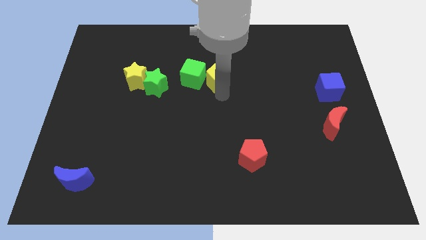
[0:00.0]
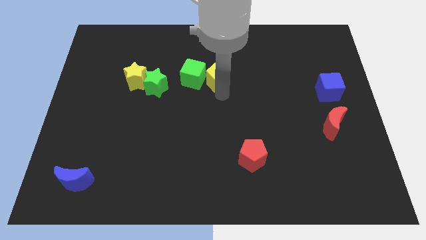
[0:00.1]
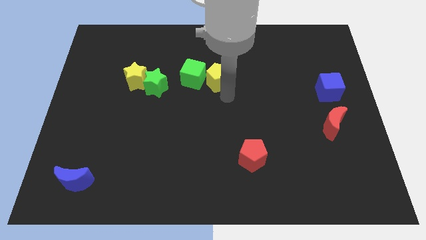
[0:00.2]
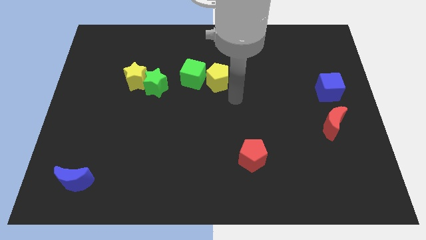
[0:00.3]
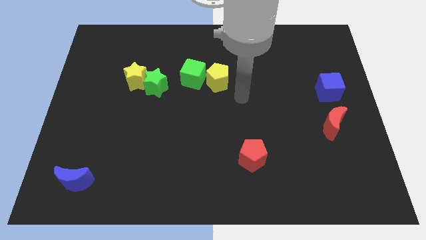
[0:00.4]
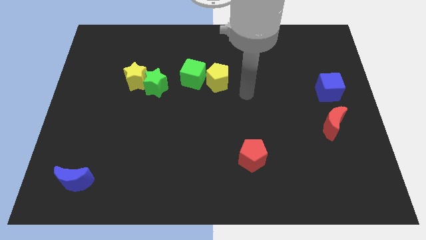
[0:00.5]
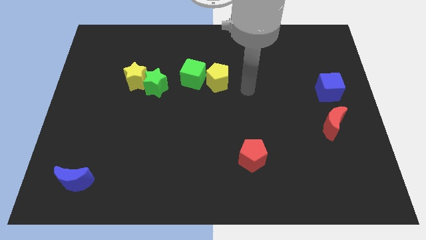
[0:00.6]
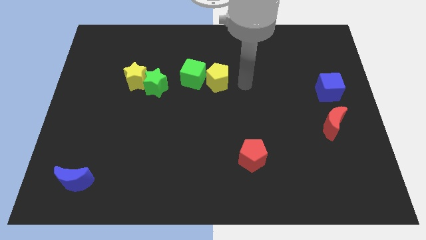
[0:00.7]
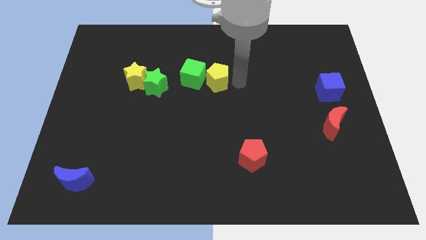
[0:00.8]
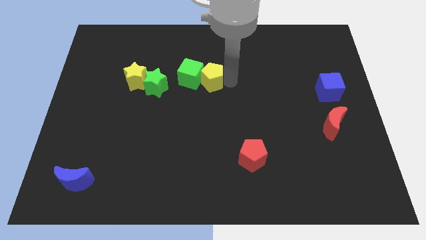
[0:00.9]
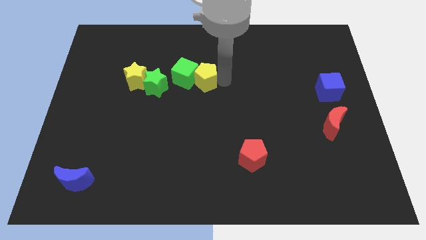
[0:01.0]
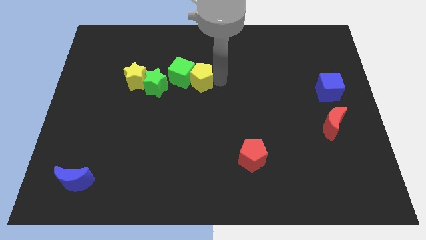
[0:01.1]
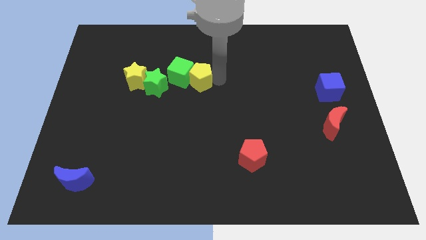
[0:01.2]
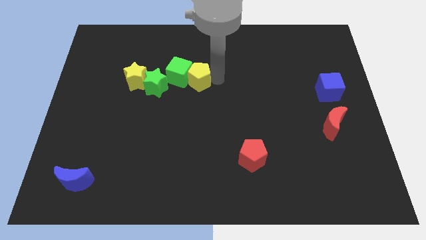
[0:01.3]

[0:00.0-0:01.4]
push the green cube and yellow pentagon towards the left

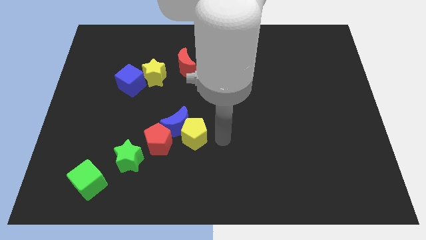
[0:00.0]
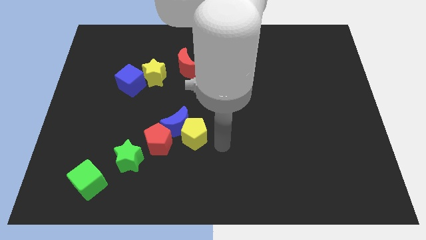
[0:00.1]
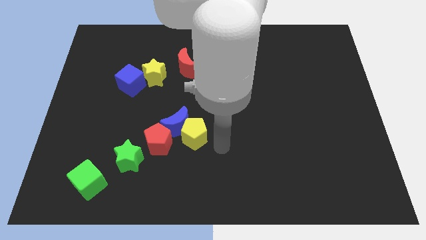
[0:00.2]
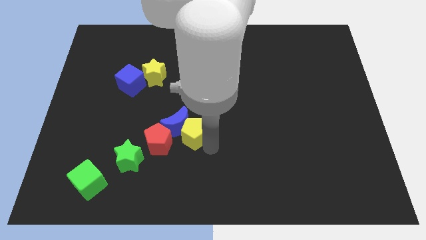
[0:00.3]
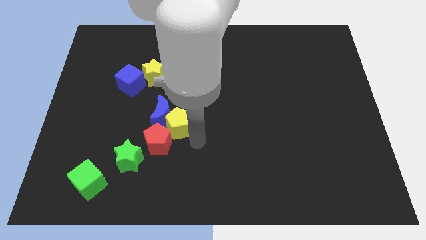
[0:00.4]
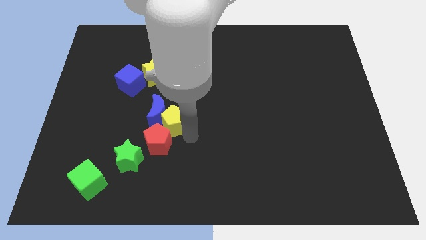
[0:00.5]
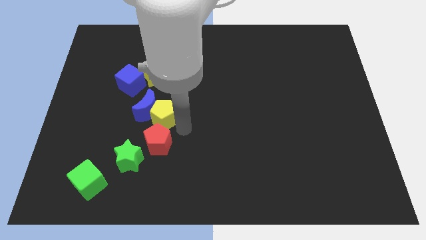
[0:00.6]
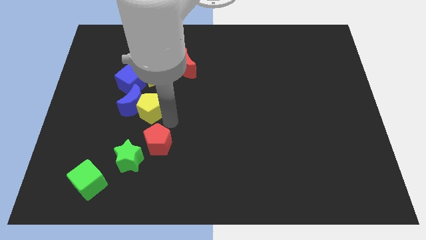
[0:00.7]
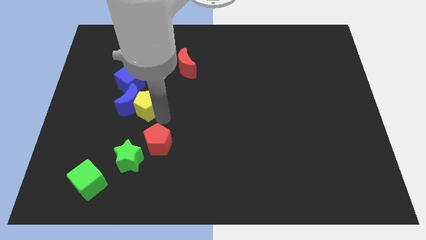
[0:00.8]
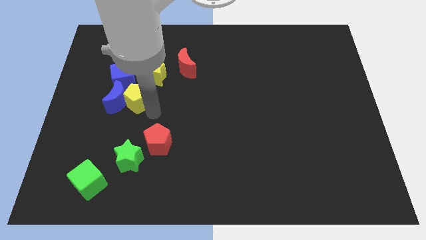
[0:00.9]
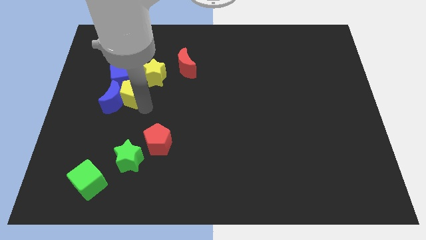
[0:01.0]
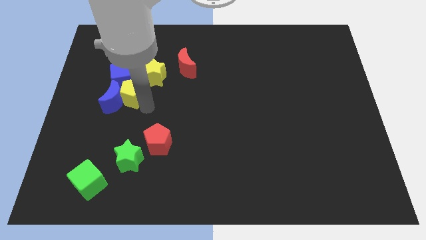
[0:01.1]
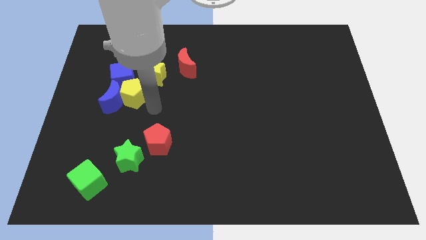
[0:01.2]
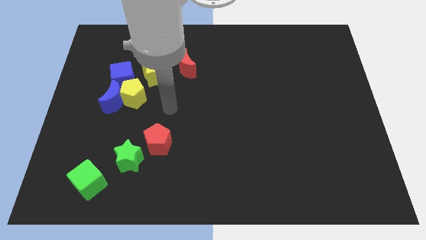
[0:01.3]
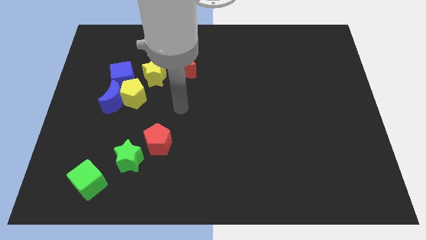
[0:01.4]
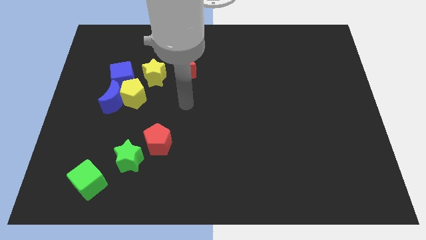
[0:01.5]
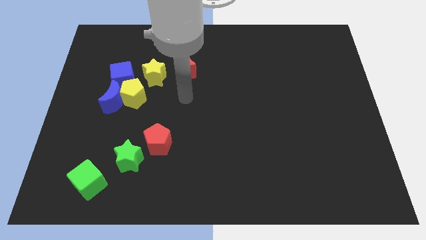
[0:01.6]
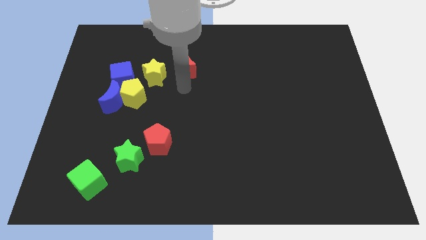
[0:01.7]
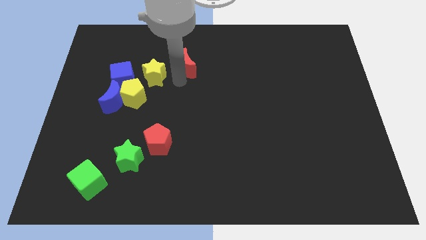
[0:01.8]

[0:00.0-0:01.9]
move the yellow pentagon and blue crescent towards the left center

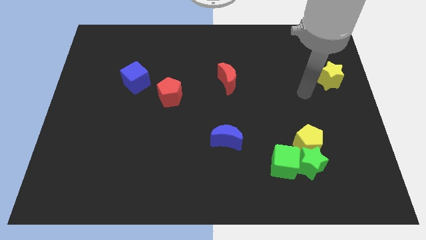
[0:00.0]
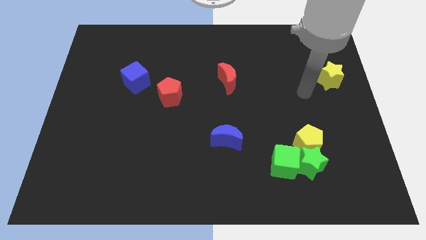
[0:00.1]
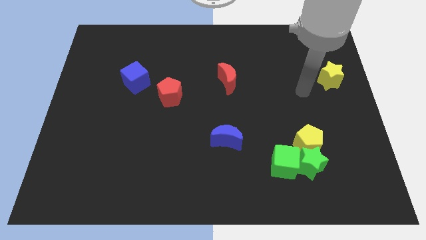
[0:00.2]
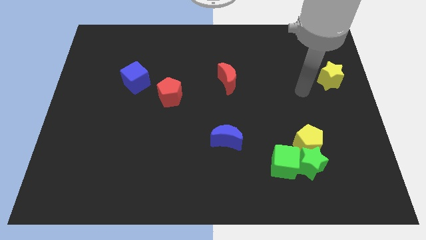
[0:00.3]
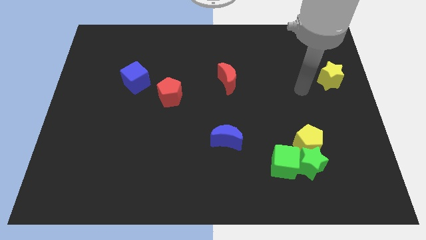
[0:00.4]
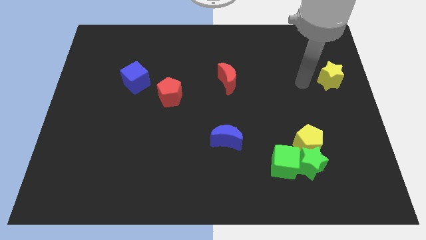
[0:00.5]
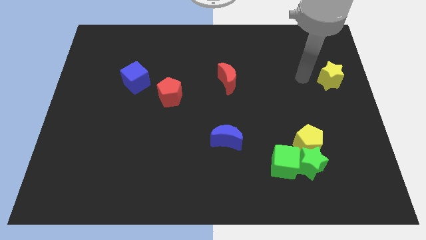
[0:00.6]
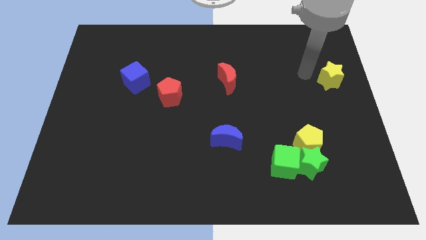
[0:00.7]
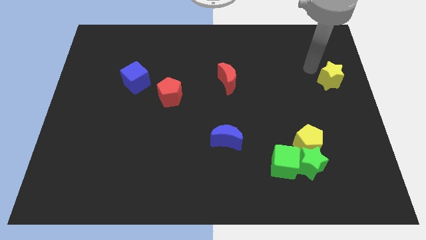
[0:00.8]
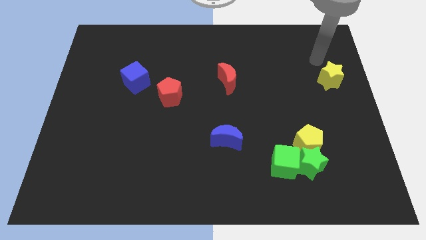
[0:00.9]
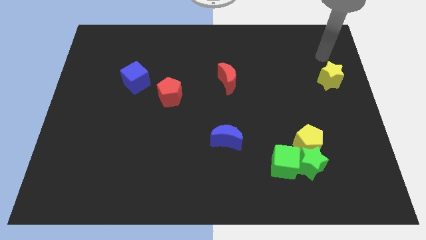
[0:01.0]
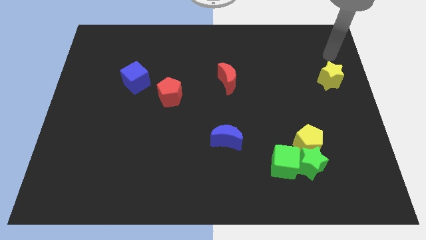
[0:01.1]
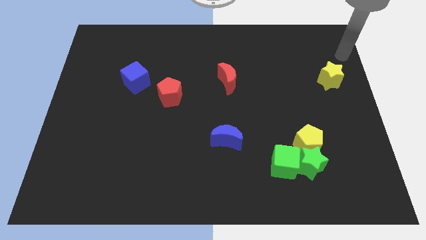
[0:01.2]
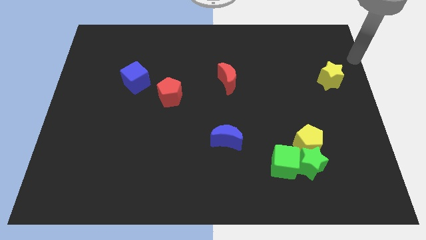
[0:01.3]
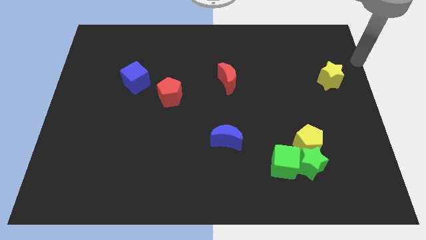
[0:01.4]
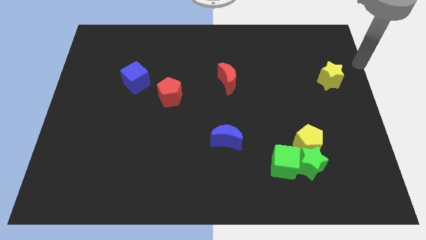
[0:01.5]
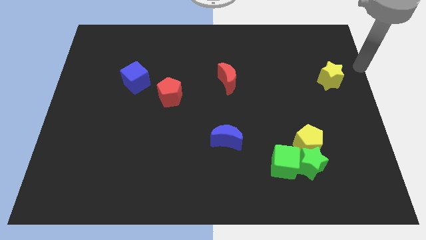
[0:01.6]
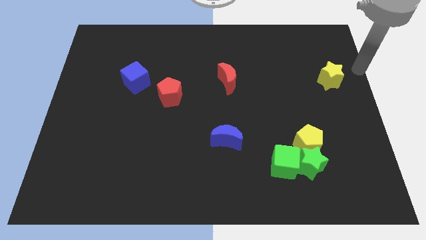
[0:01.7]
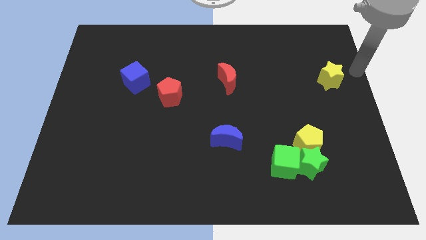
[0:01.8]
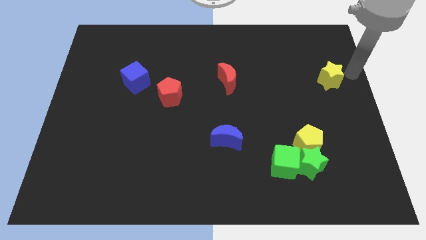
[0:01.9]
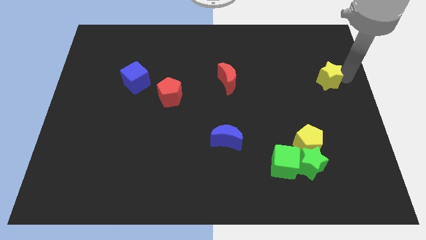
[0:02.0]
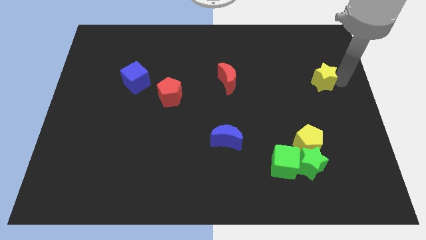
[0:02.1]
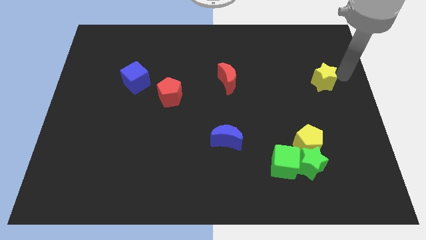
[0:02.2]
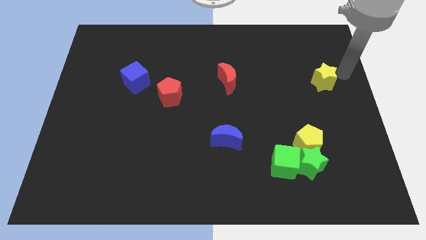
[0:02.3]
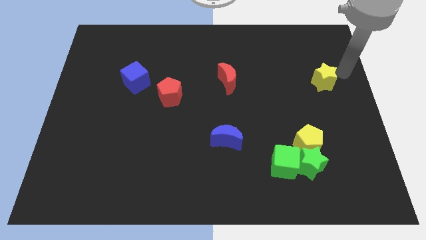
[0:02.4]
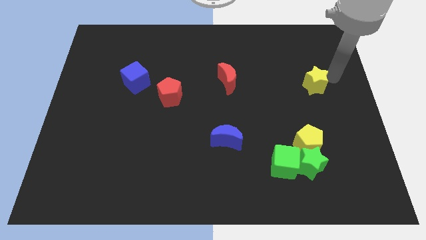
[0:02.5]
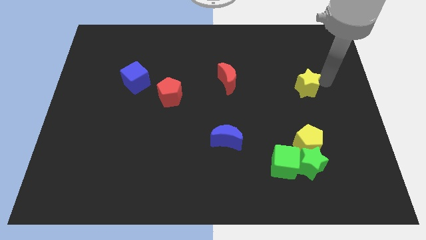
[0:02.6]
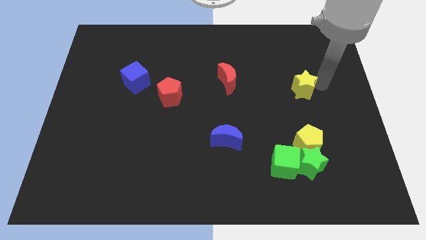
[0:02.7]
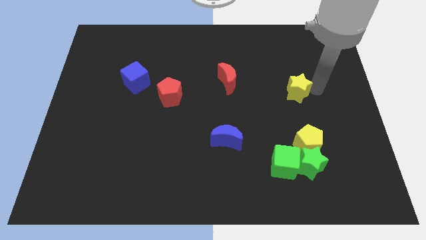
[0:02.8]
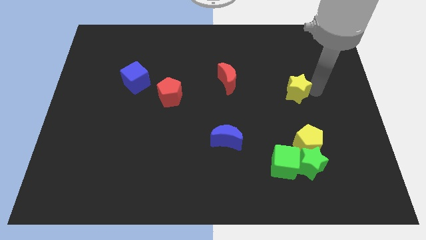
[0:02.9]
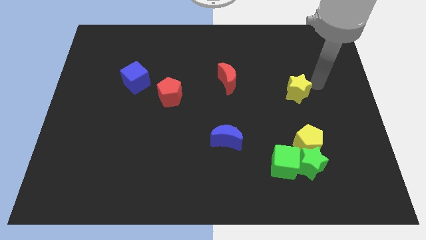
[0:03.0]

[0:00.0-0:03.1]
push the yellow star to the top of the yellow pentagon

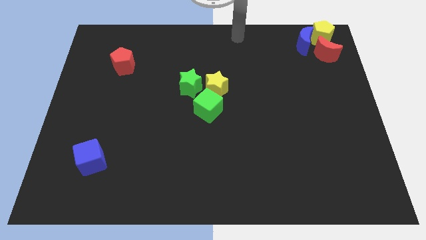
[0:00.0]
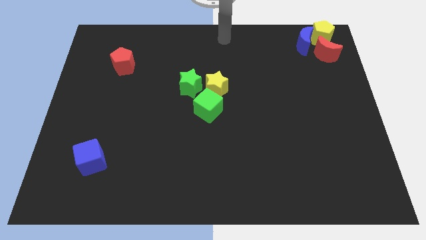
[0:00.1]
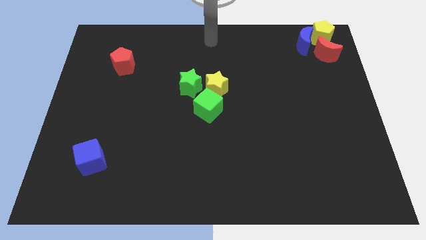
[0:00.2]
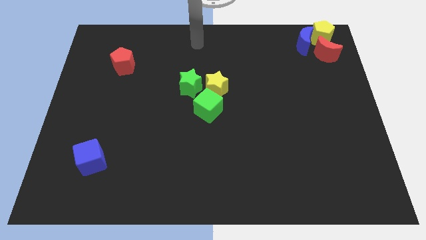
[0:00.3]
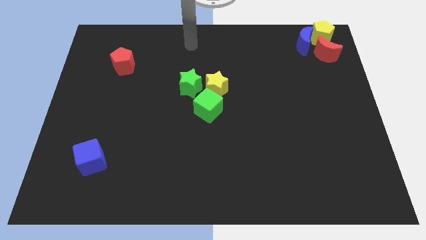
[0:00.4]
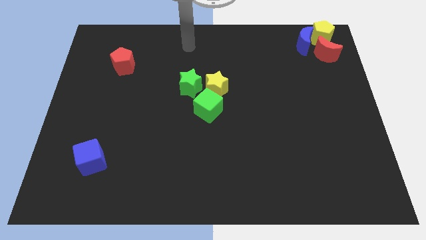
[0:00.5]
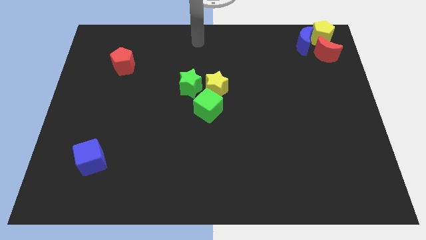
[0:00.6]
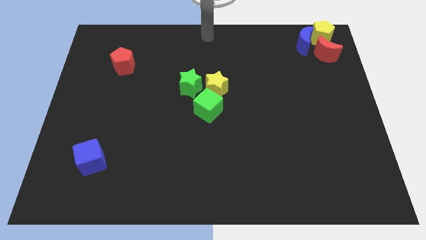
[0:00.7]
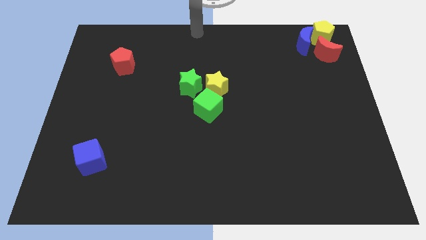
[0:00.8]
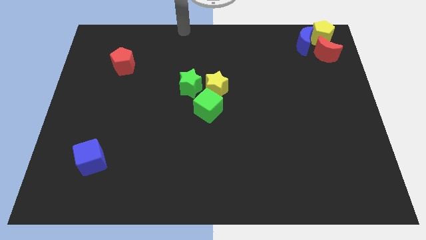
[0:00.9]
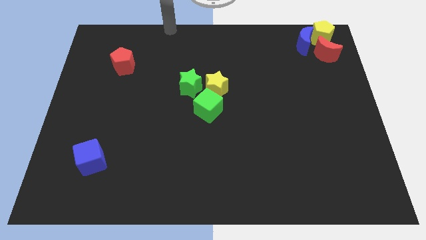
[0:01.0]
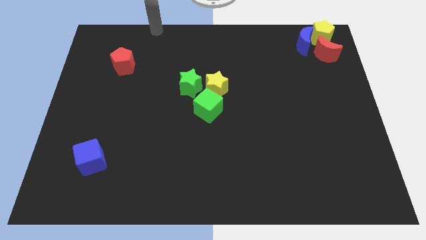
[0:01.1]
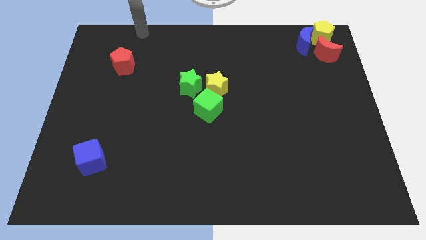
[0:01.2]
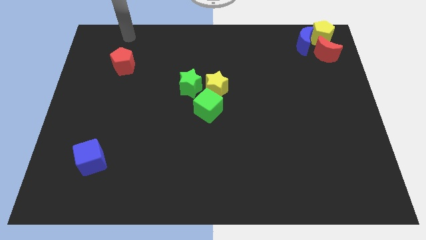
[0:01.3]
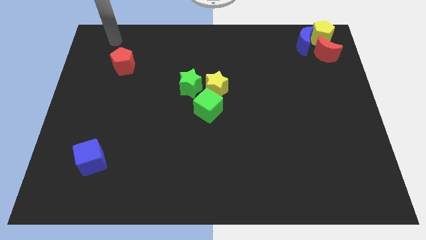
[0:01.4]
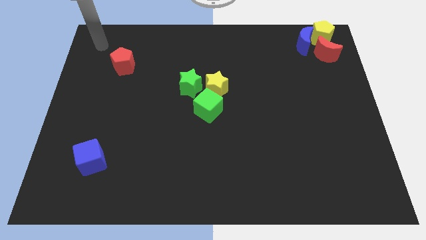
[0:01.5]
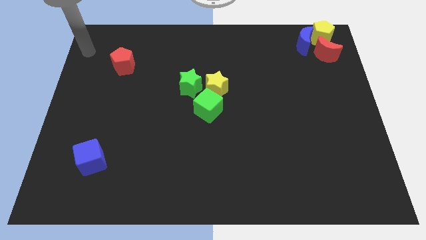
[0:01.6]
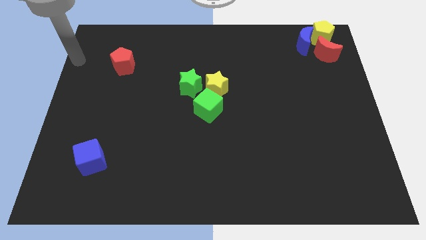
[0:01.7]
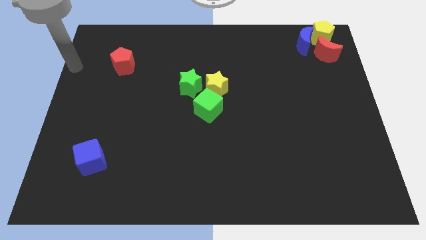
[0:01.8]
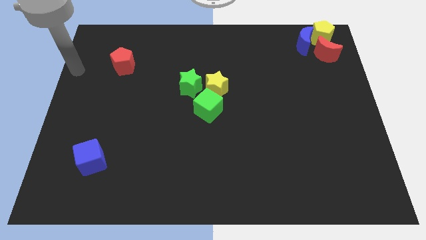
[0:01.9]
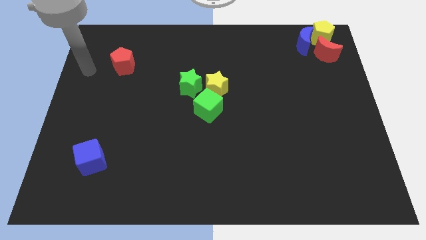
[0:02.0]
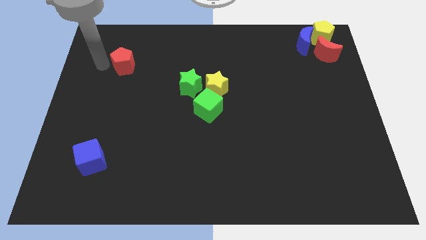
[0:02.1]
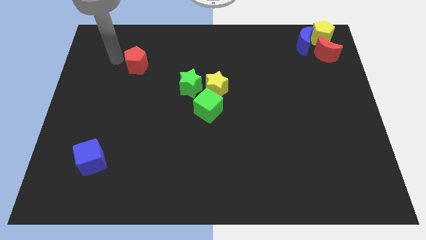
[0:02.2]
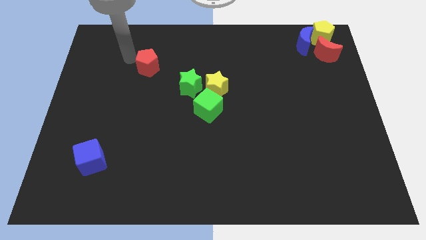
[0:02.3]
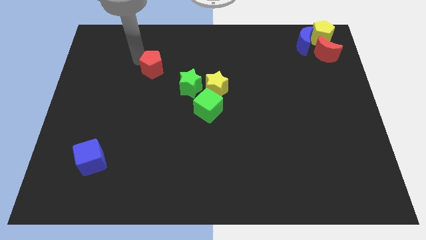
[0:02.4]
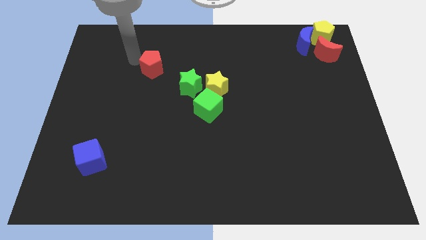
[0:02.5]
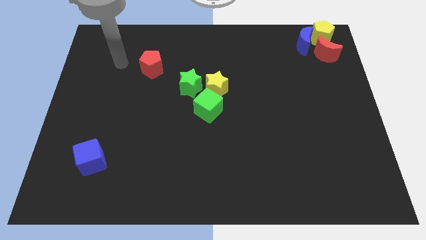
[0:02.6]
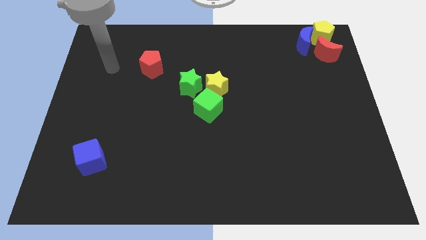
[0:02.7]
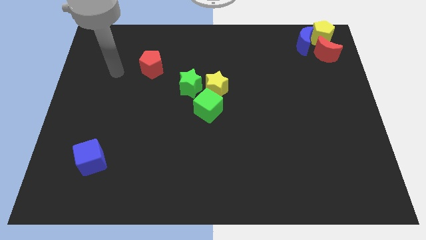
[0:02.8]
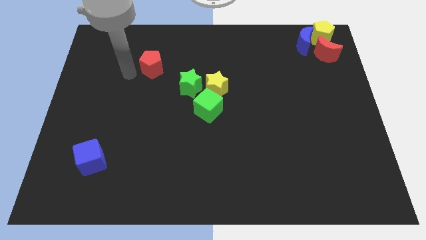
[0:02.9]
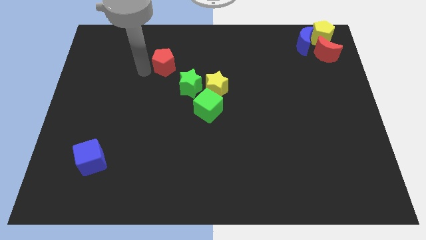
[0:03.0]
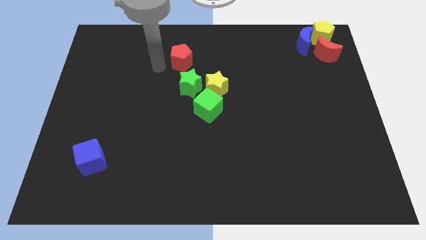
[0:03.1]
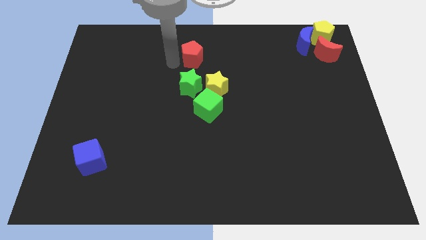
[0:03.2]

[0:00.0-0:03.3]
place the red pentagon above the green star
